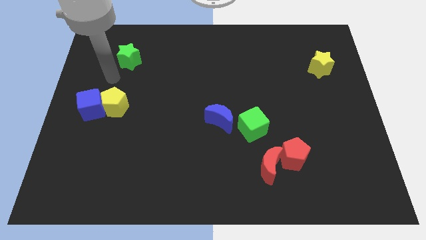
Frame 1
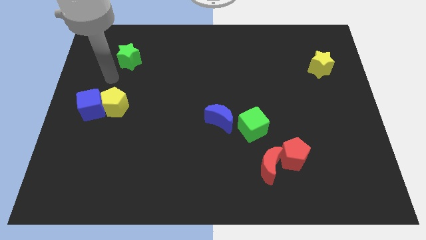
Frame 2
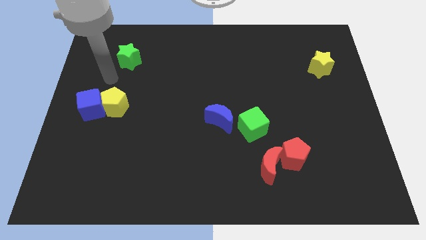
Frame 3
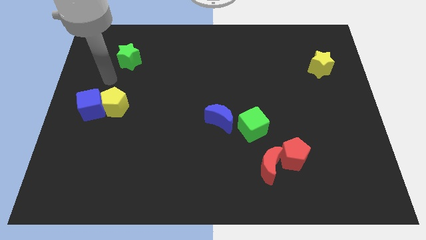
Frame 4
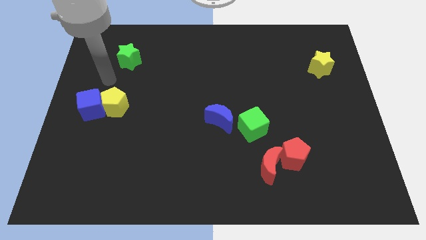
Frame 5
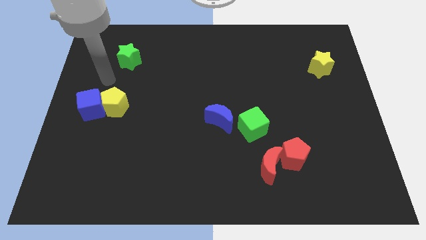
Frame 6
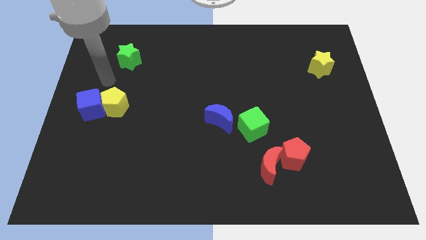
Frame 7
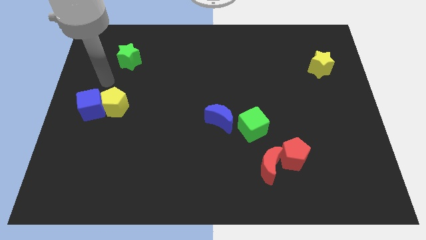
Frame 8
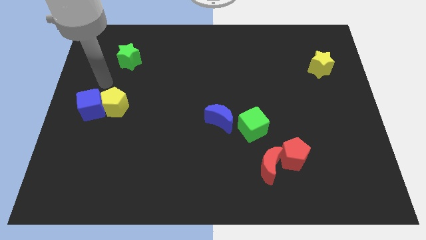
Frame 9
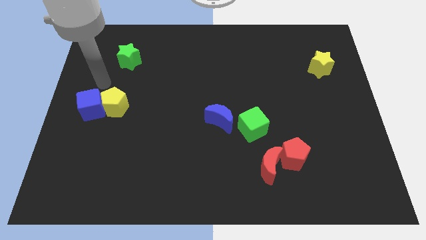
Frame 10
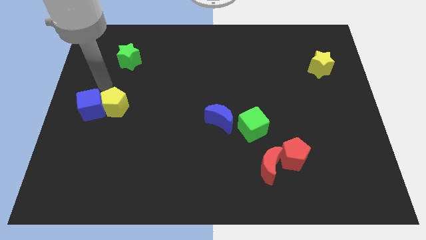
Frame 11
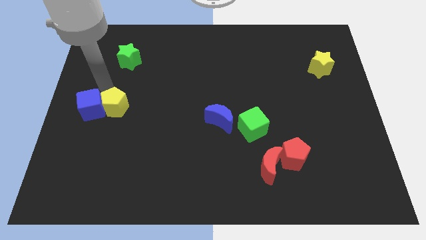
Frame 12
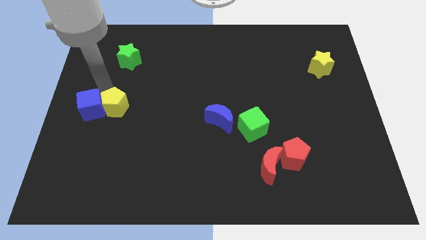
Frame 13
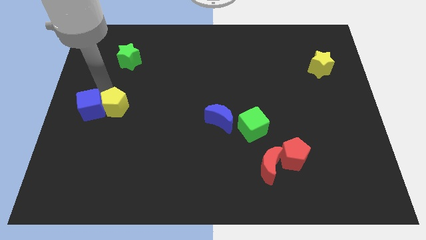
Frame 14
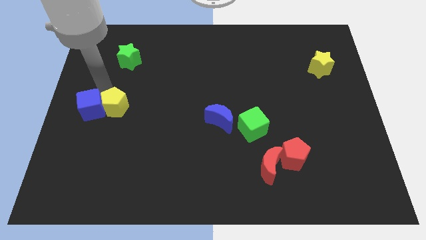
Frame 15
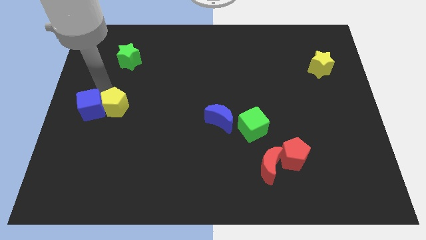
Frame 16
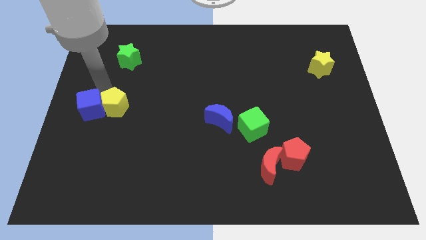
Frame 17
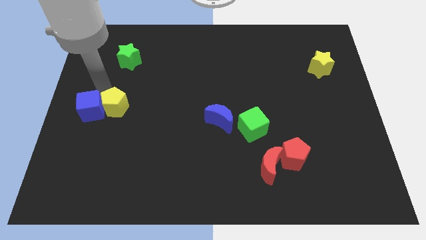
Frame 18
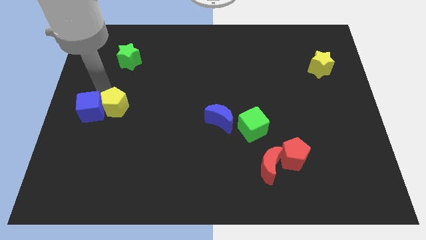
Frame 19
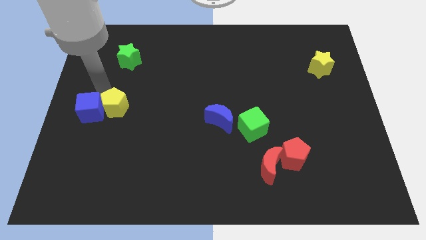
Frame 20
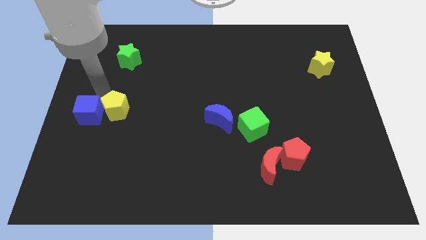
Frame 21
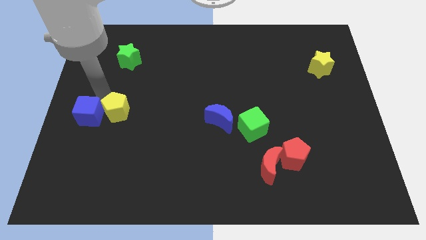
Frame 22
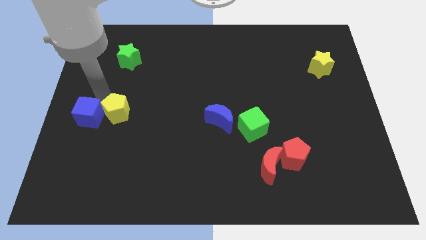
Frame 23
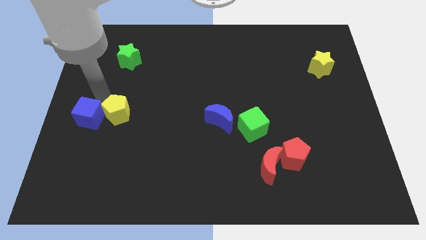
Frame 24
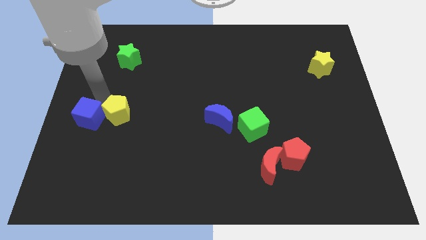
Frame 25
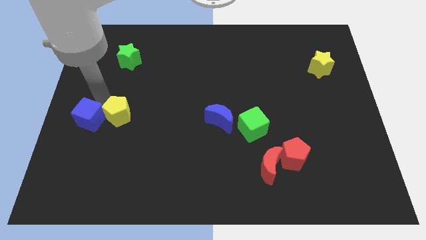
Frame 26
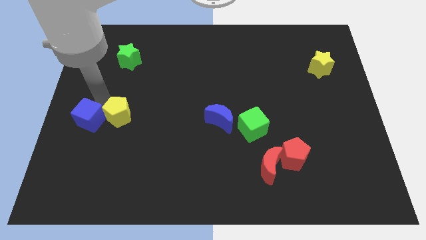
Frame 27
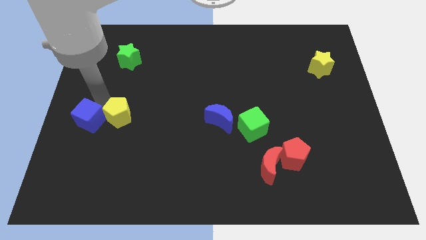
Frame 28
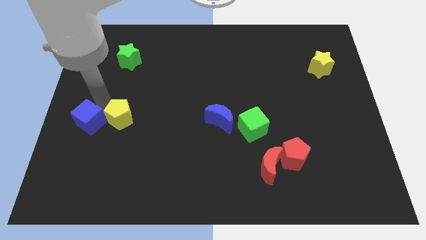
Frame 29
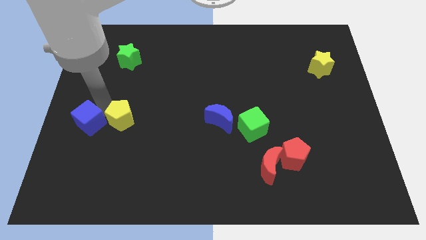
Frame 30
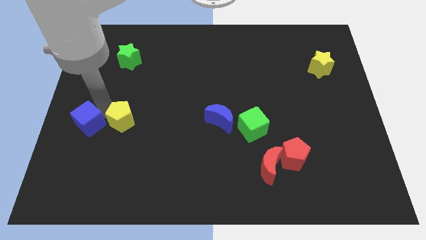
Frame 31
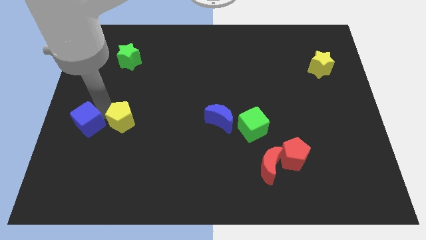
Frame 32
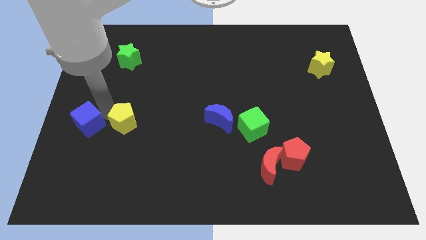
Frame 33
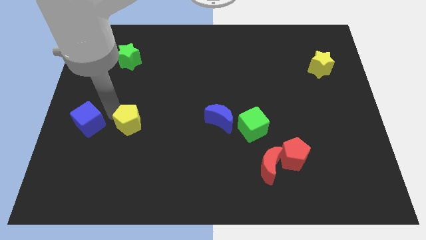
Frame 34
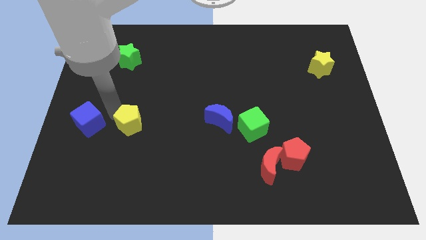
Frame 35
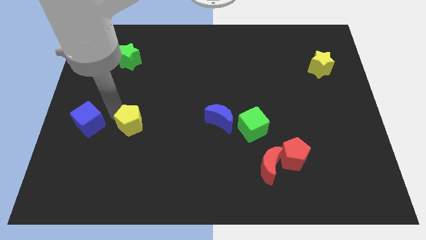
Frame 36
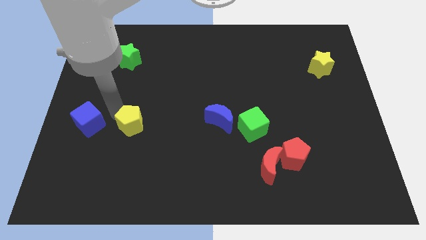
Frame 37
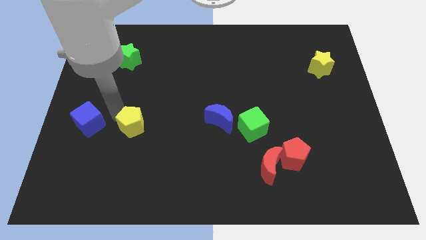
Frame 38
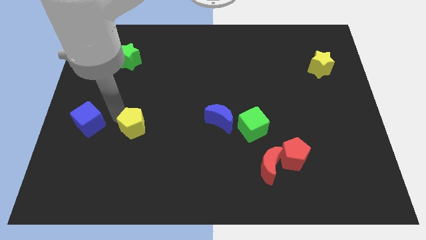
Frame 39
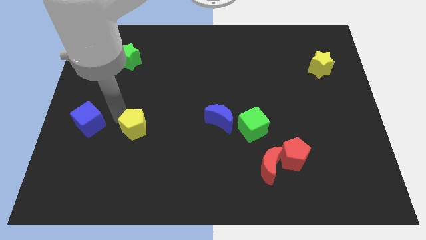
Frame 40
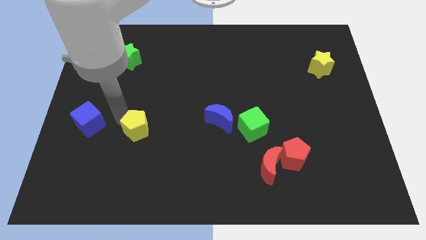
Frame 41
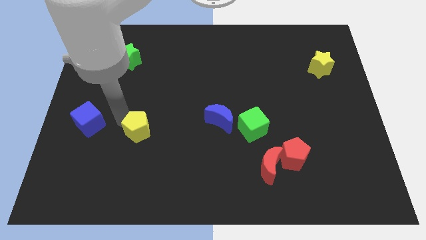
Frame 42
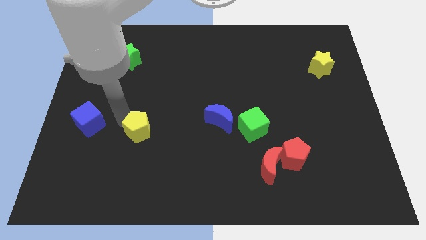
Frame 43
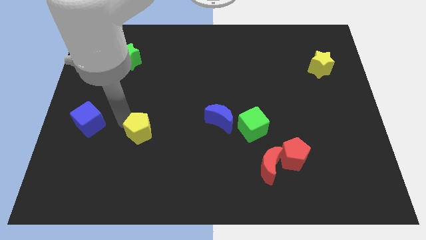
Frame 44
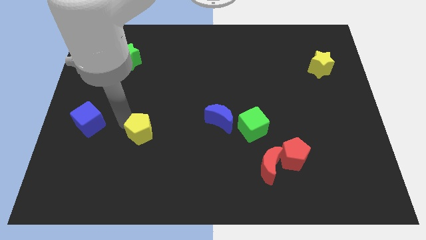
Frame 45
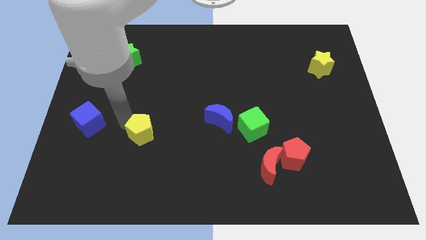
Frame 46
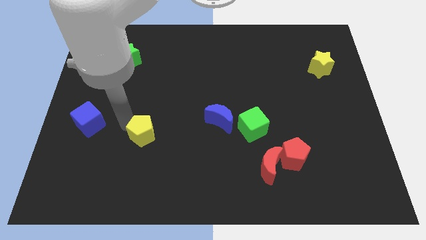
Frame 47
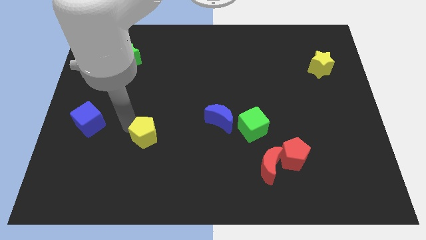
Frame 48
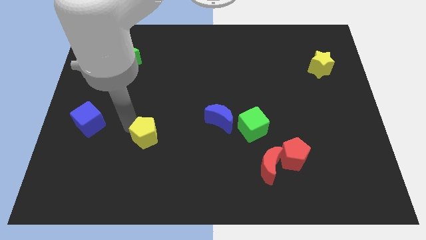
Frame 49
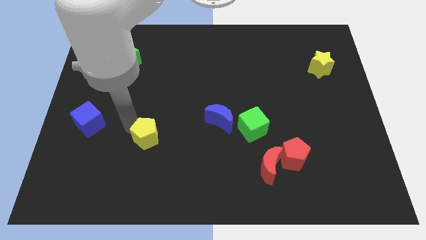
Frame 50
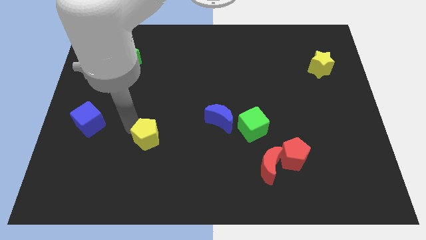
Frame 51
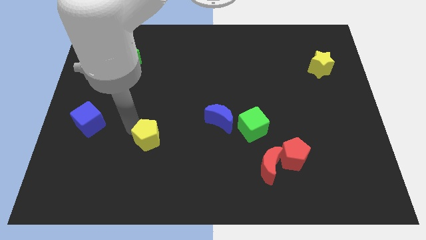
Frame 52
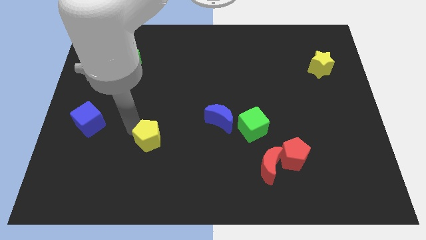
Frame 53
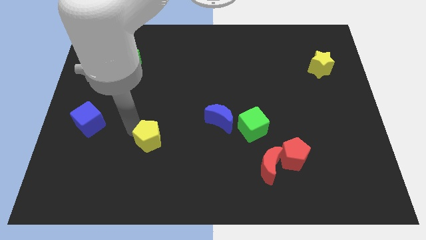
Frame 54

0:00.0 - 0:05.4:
separate the yellow pentagon and the blue cube

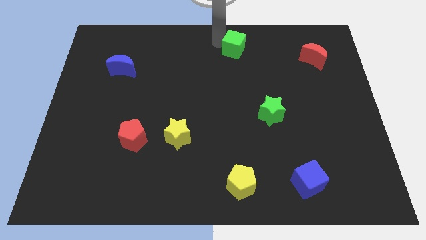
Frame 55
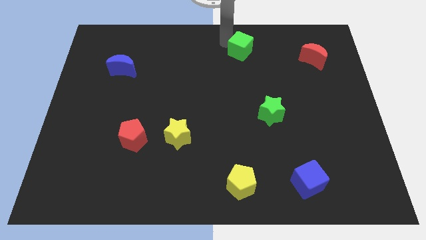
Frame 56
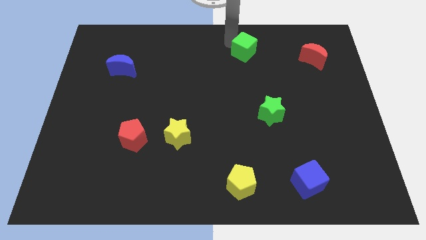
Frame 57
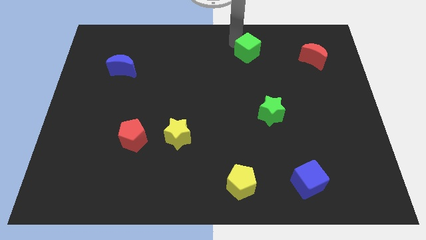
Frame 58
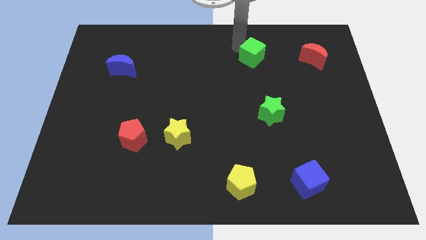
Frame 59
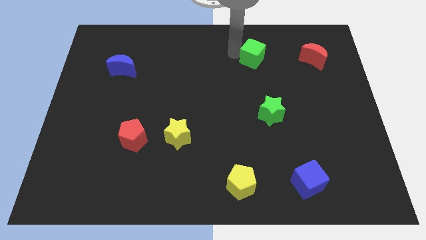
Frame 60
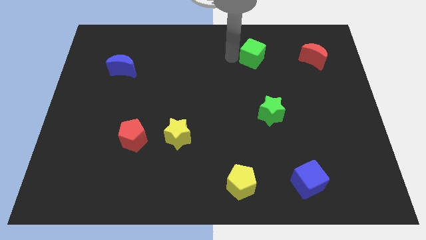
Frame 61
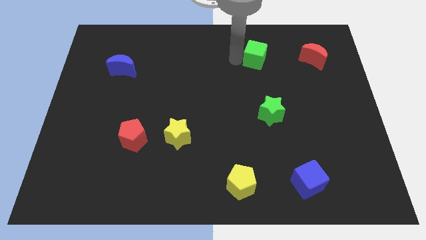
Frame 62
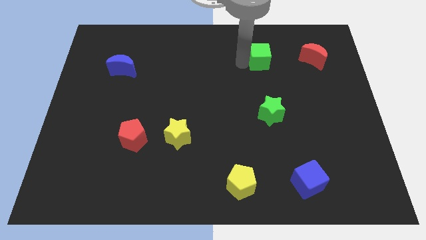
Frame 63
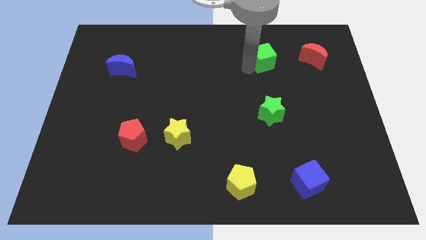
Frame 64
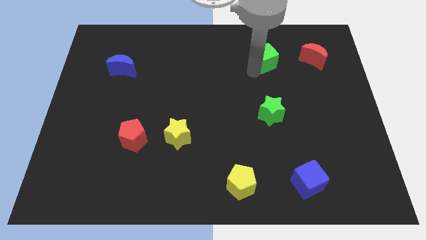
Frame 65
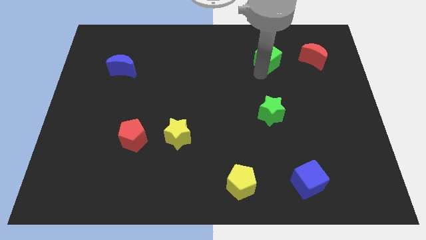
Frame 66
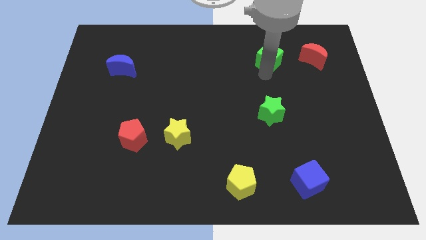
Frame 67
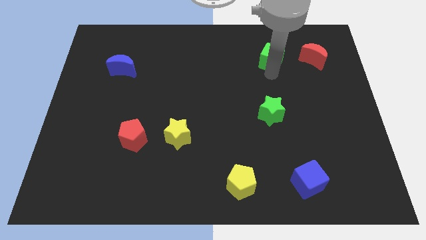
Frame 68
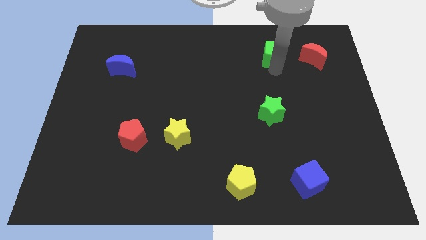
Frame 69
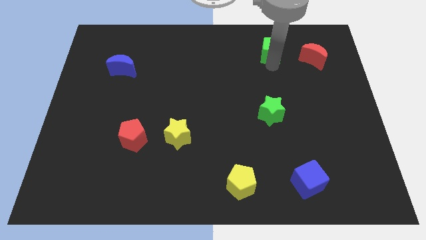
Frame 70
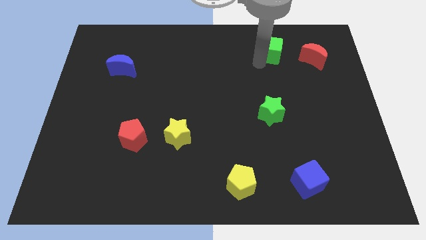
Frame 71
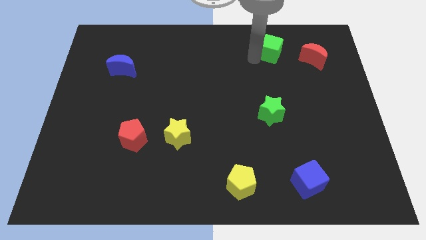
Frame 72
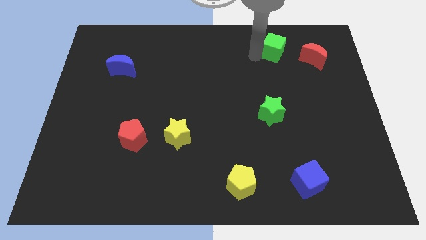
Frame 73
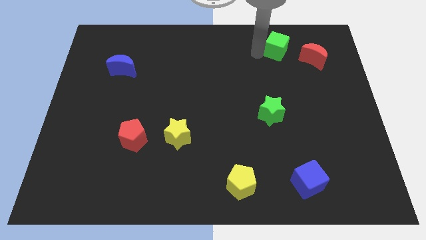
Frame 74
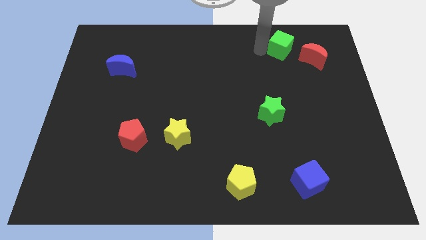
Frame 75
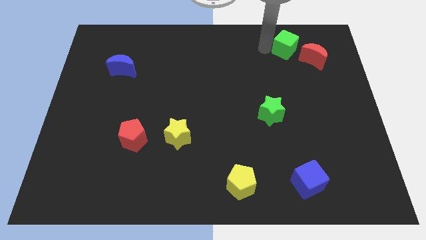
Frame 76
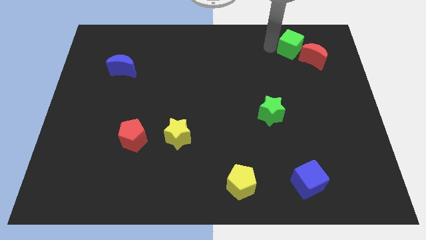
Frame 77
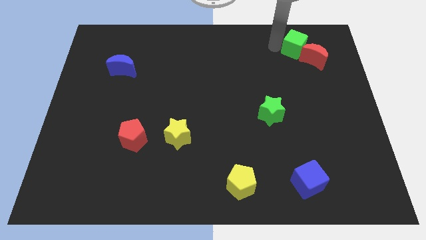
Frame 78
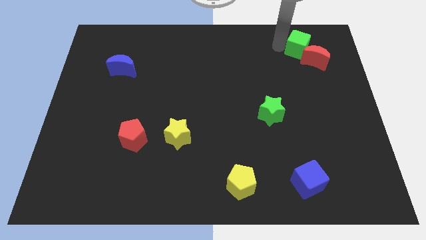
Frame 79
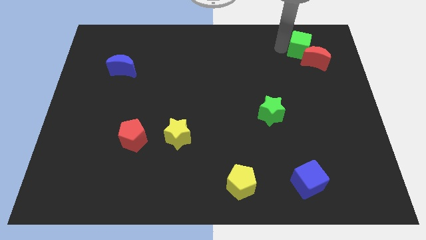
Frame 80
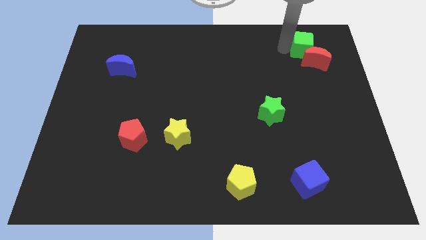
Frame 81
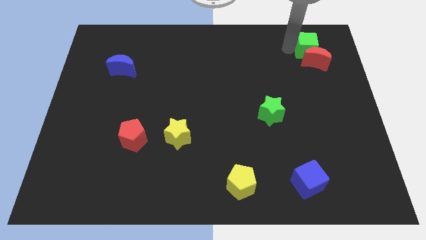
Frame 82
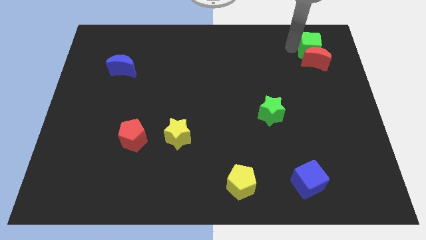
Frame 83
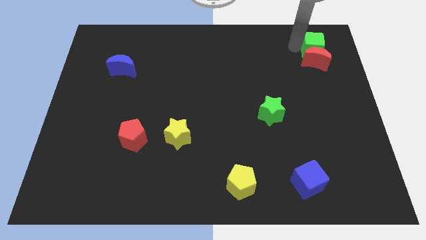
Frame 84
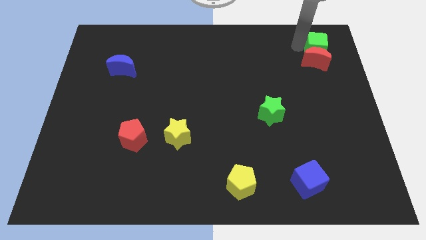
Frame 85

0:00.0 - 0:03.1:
move the green cube vertically above the red crescent

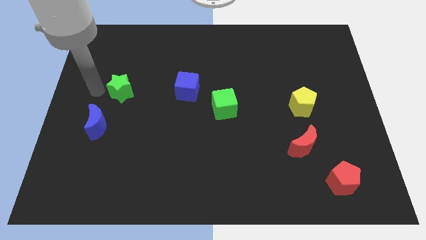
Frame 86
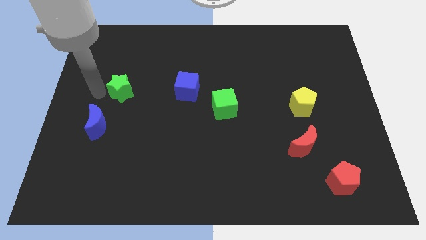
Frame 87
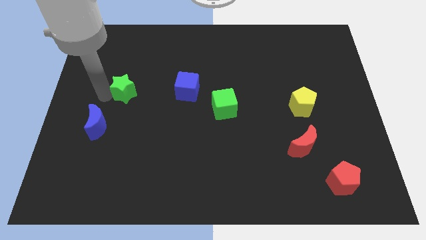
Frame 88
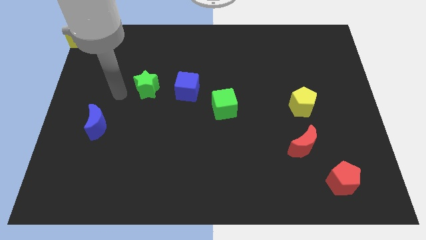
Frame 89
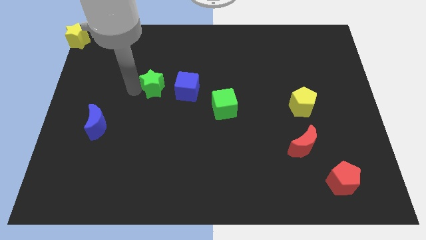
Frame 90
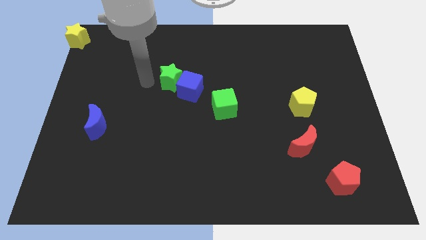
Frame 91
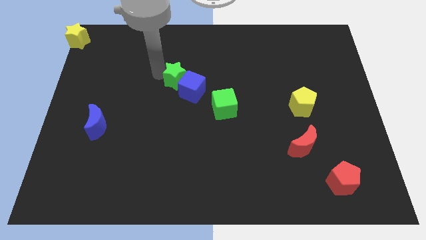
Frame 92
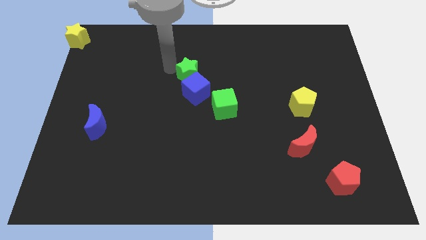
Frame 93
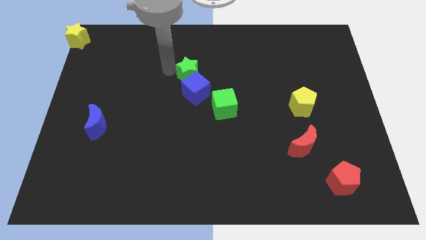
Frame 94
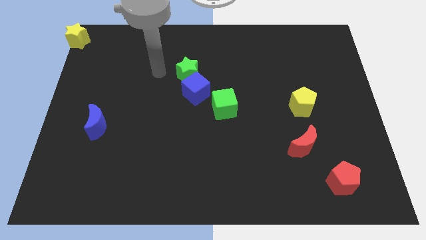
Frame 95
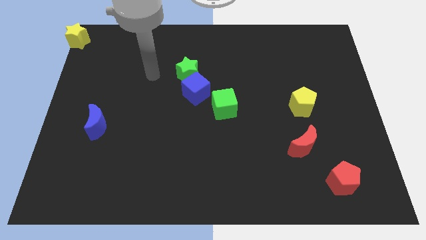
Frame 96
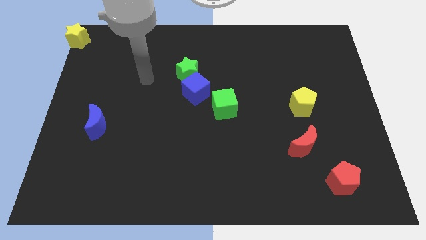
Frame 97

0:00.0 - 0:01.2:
move the green star to the top of the blue cube
